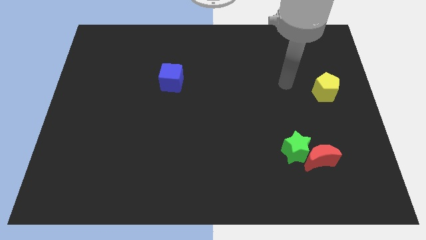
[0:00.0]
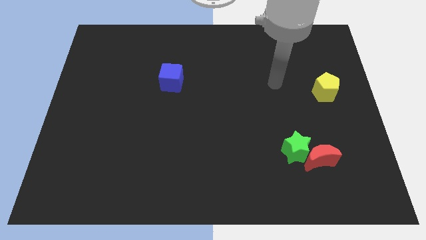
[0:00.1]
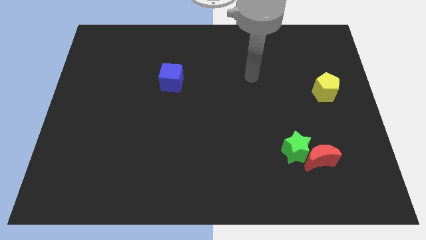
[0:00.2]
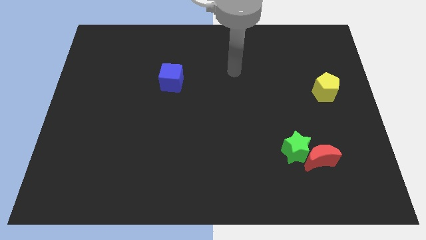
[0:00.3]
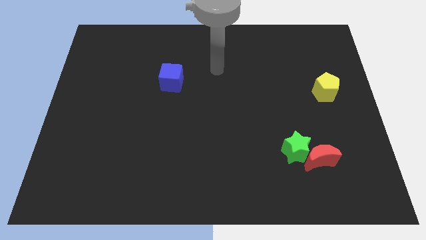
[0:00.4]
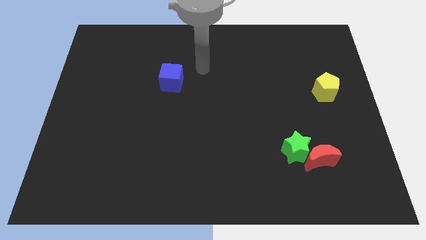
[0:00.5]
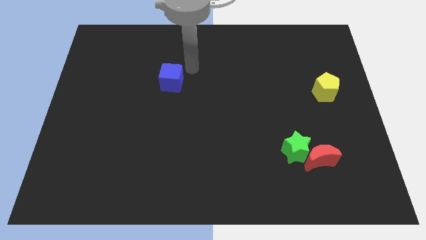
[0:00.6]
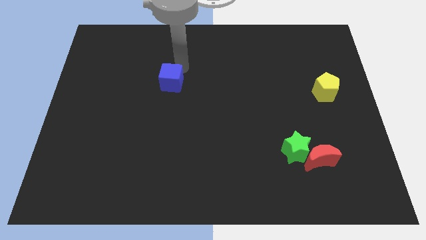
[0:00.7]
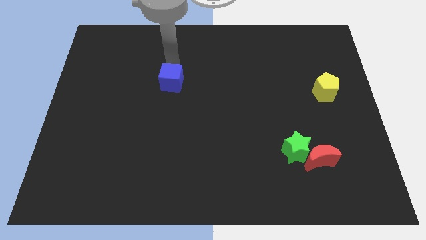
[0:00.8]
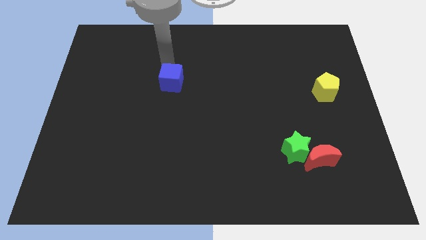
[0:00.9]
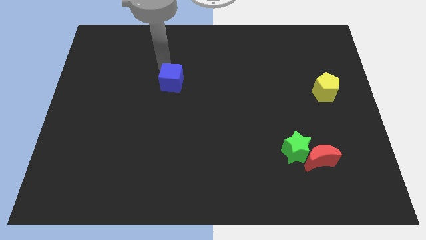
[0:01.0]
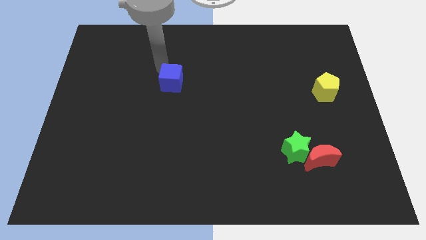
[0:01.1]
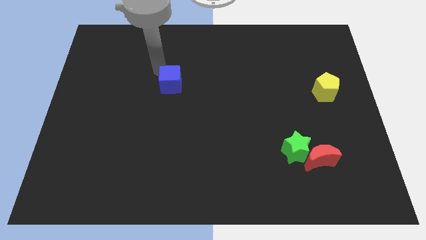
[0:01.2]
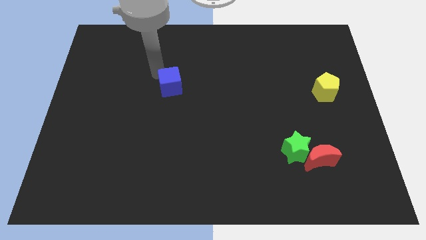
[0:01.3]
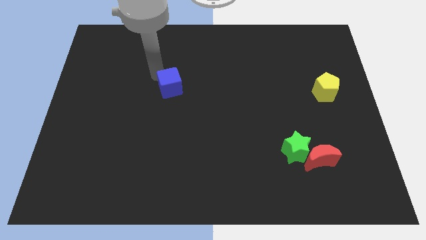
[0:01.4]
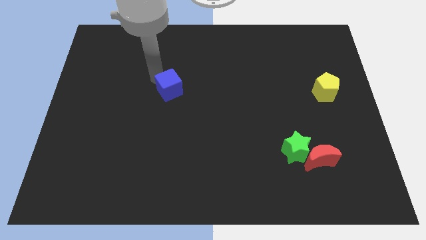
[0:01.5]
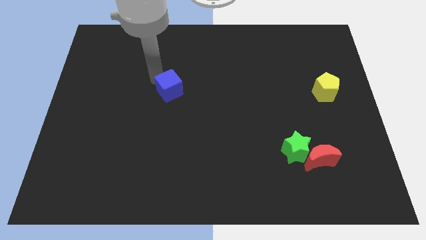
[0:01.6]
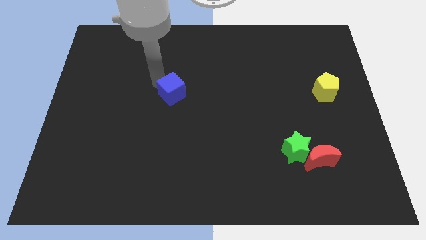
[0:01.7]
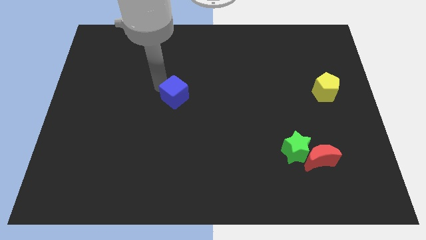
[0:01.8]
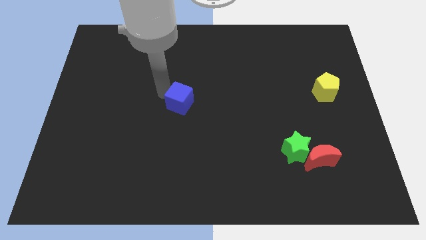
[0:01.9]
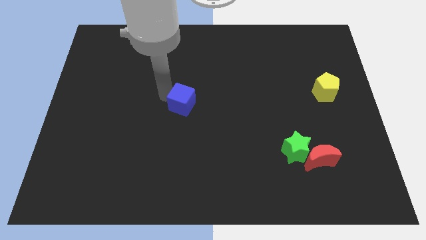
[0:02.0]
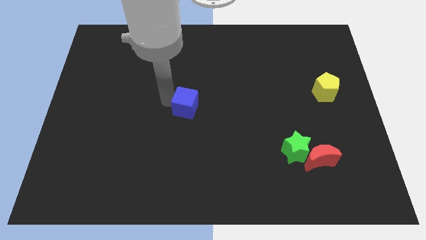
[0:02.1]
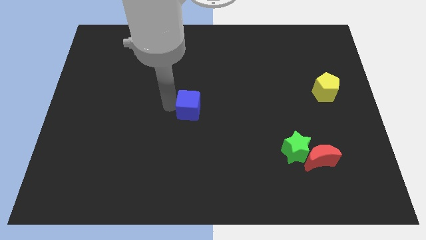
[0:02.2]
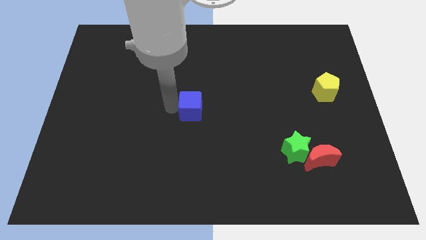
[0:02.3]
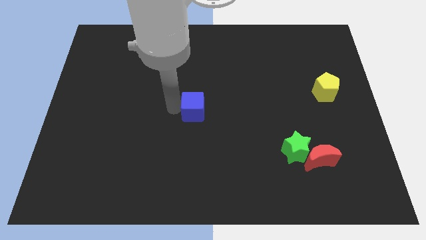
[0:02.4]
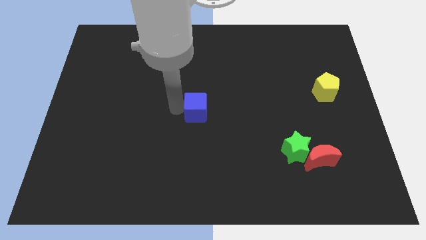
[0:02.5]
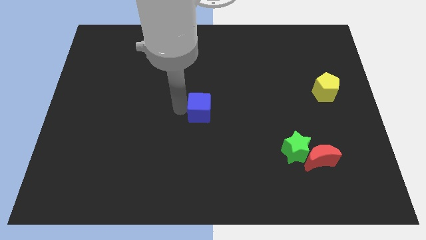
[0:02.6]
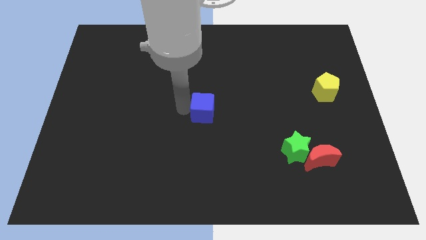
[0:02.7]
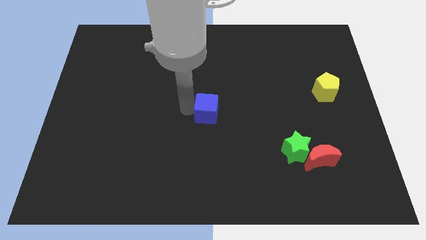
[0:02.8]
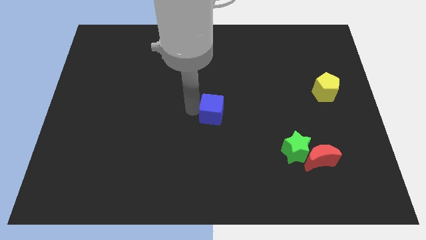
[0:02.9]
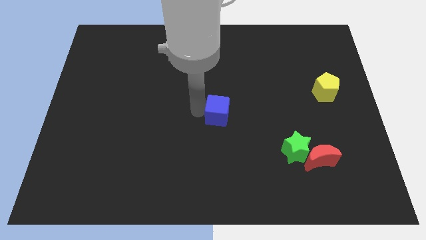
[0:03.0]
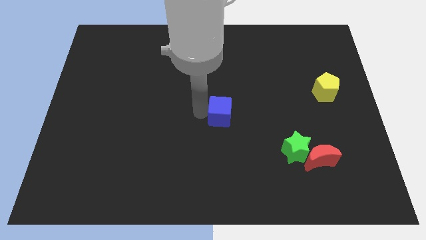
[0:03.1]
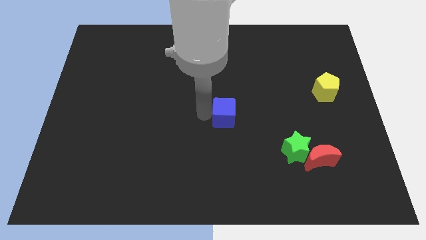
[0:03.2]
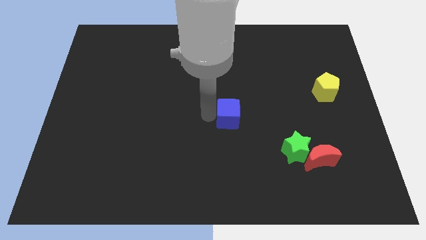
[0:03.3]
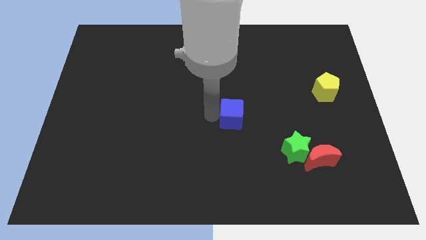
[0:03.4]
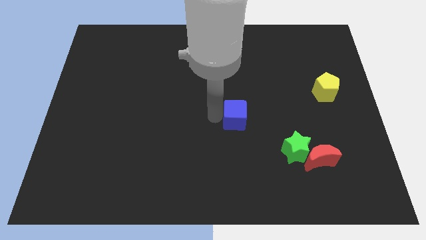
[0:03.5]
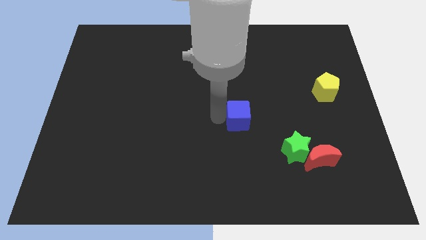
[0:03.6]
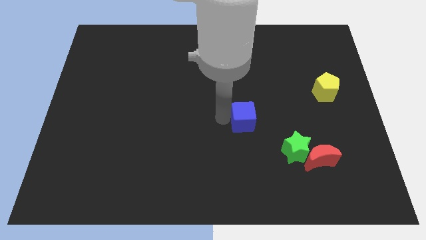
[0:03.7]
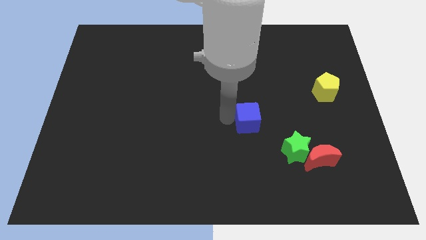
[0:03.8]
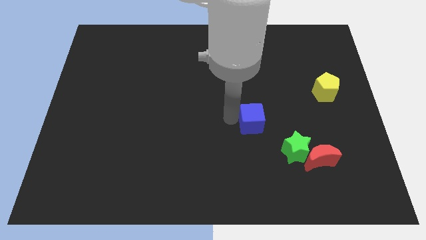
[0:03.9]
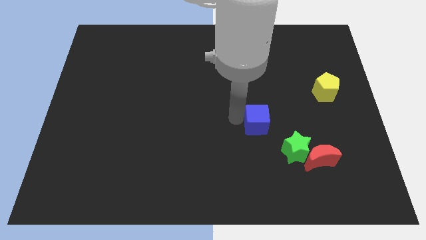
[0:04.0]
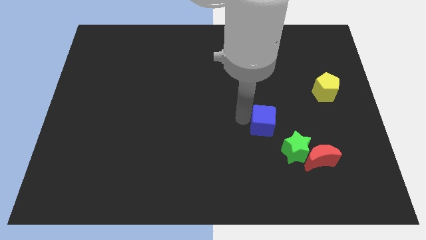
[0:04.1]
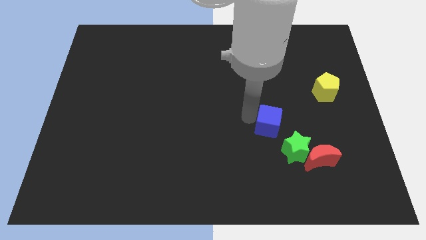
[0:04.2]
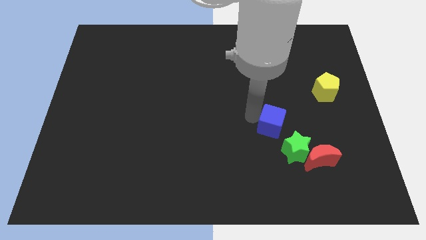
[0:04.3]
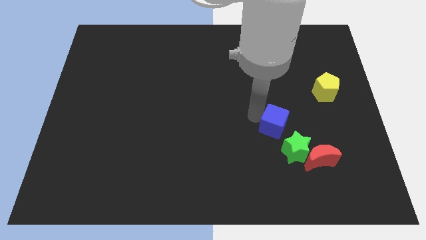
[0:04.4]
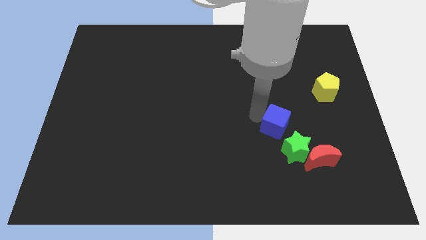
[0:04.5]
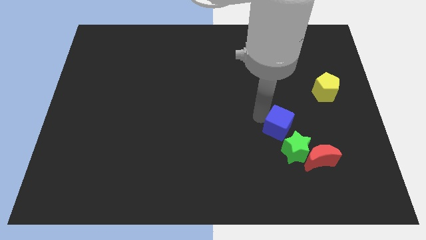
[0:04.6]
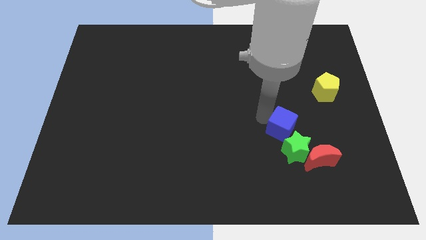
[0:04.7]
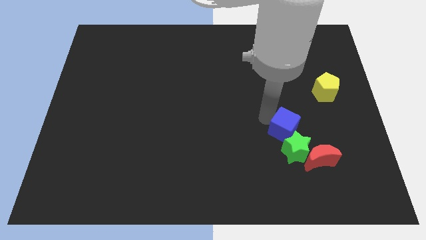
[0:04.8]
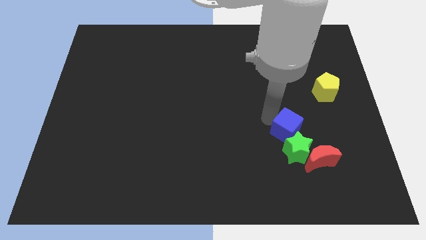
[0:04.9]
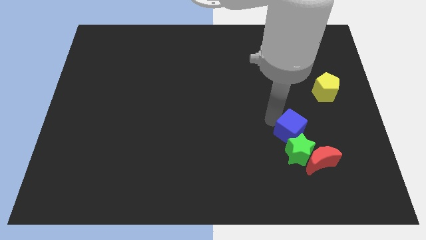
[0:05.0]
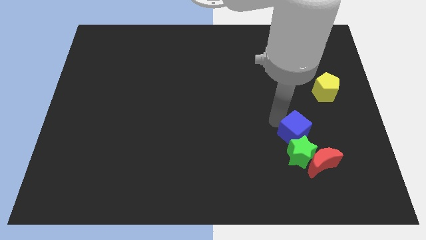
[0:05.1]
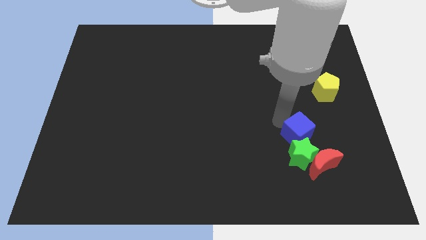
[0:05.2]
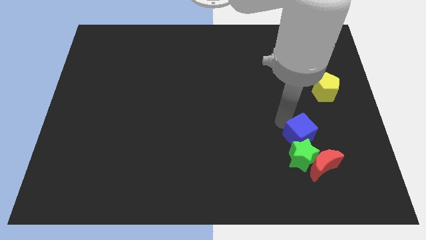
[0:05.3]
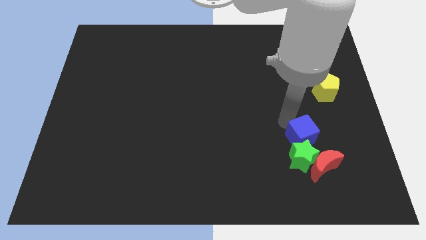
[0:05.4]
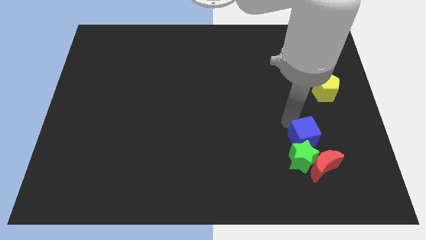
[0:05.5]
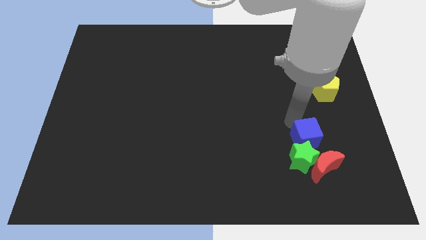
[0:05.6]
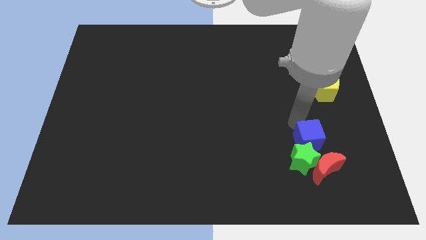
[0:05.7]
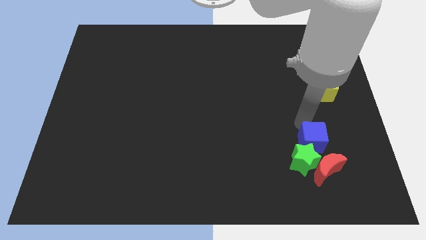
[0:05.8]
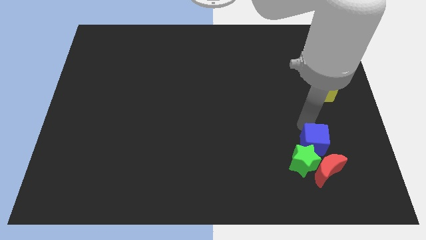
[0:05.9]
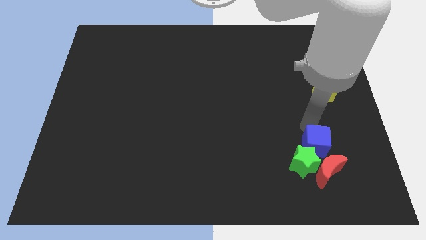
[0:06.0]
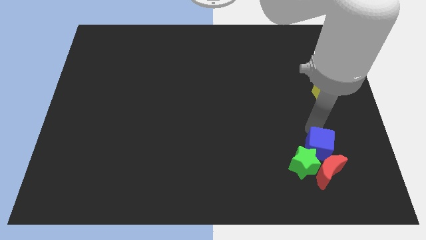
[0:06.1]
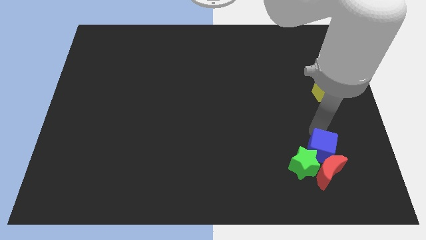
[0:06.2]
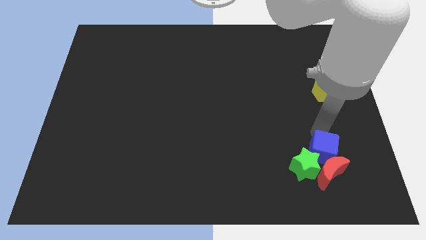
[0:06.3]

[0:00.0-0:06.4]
push the blue block close to the red moon

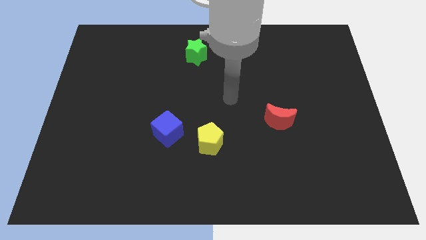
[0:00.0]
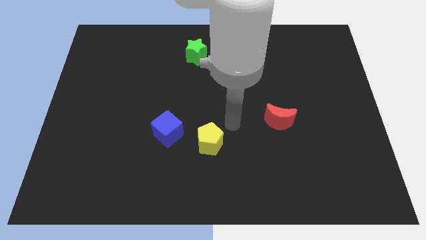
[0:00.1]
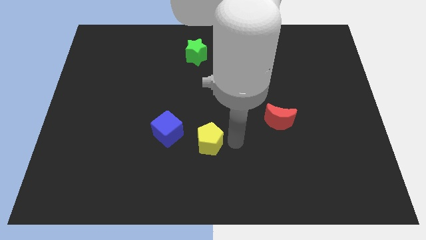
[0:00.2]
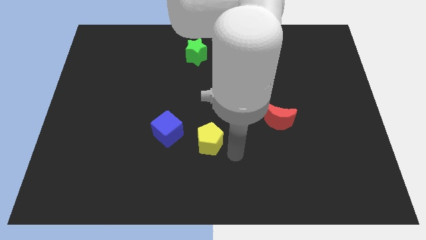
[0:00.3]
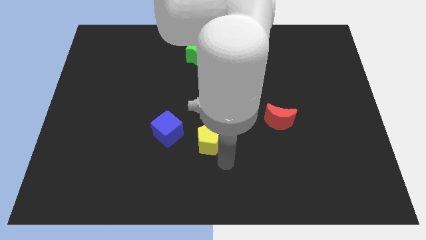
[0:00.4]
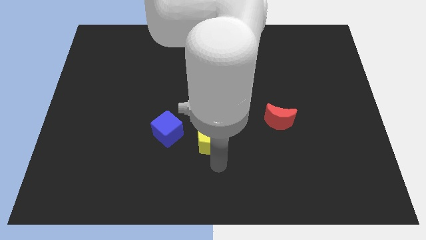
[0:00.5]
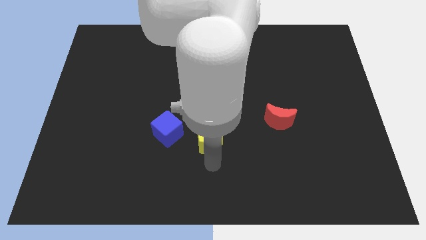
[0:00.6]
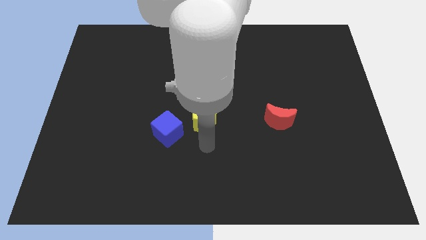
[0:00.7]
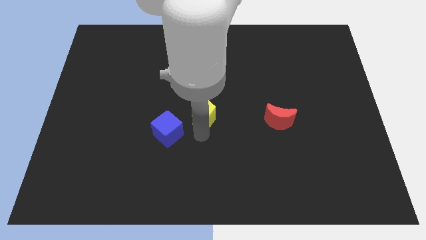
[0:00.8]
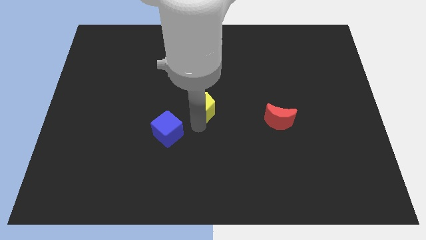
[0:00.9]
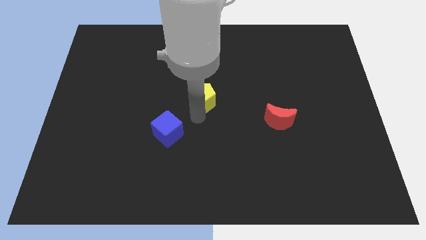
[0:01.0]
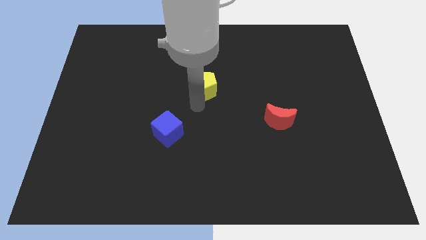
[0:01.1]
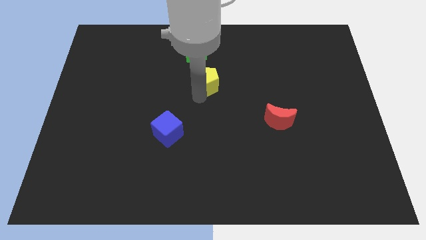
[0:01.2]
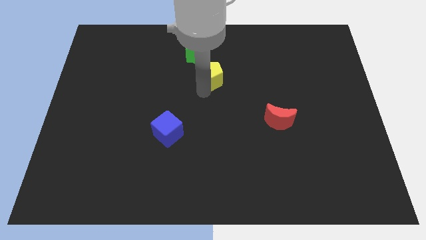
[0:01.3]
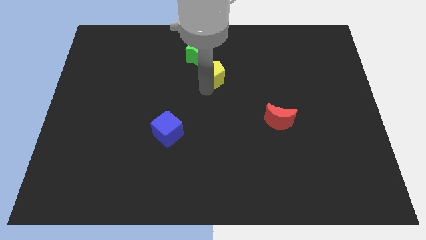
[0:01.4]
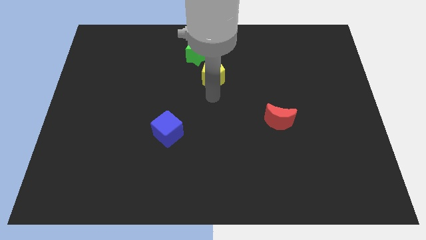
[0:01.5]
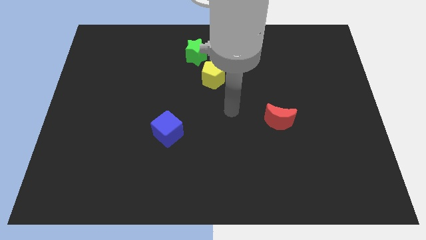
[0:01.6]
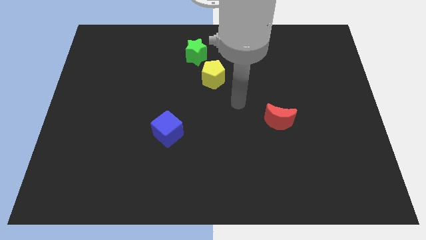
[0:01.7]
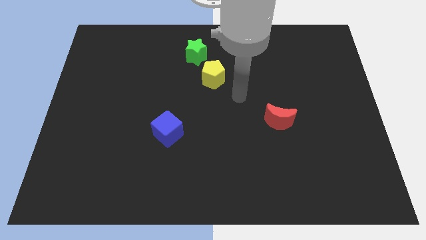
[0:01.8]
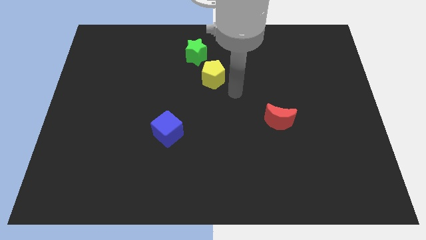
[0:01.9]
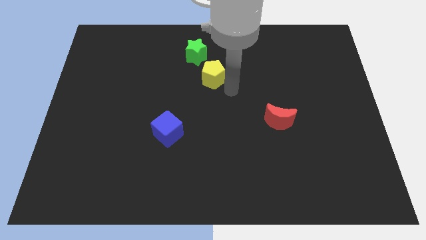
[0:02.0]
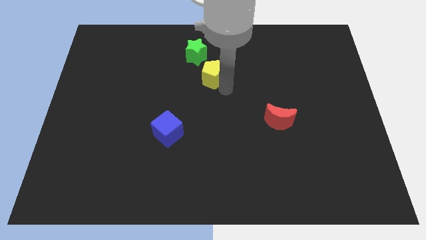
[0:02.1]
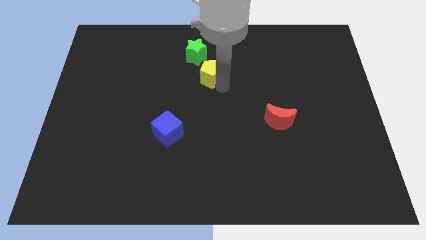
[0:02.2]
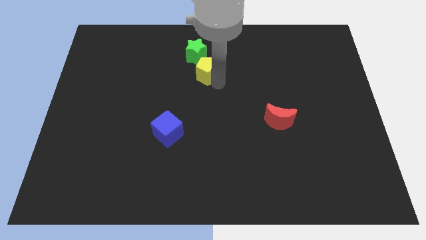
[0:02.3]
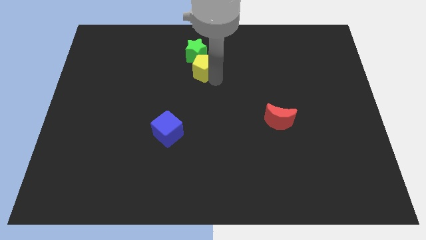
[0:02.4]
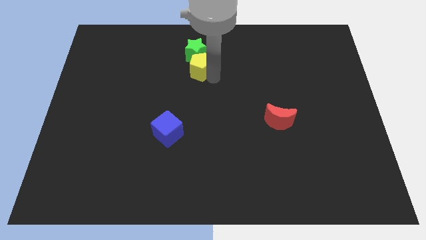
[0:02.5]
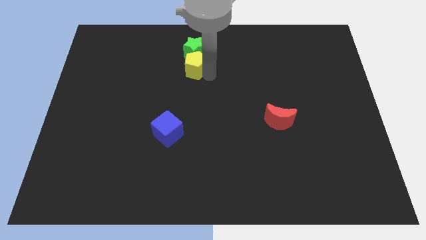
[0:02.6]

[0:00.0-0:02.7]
move the yellow block next to the green block
